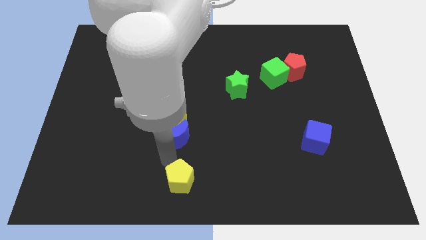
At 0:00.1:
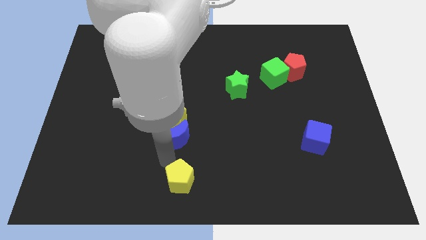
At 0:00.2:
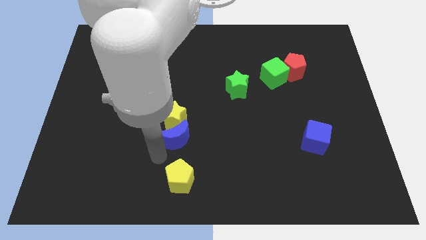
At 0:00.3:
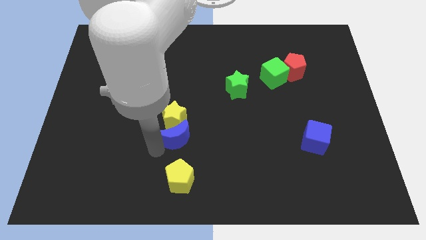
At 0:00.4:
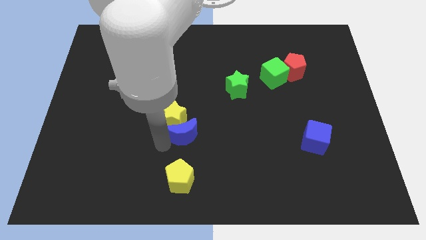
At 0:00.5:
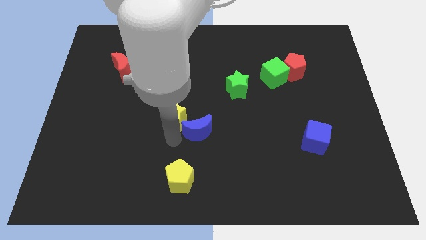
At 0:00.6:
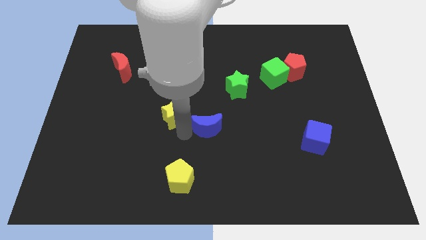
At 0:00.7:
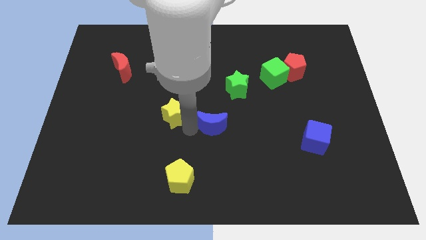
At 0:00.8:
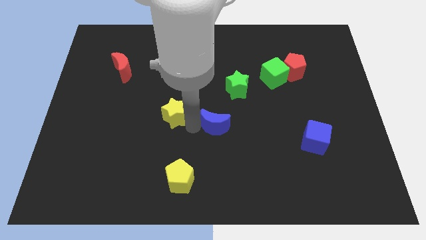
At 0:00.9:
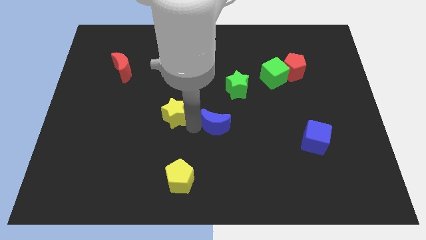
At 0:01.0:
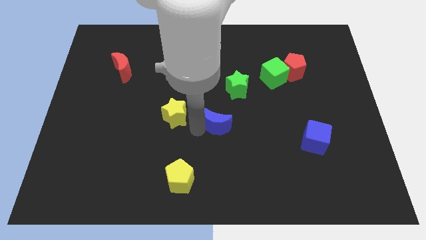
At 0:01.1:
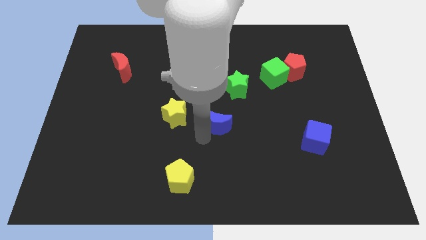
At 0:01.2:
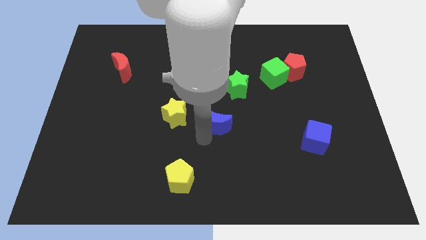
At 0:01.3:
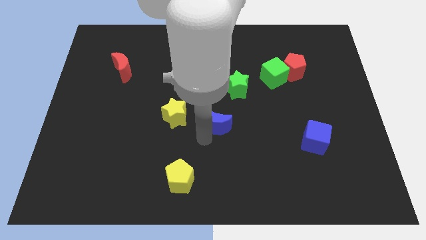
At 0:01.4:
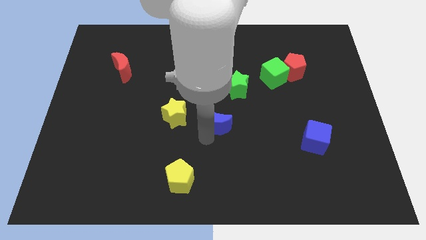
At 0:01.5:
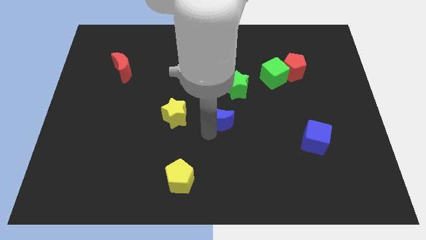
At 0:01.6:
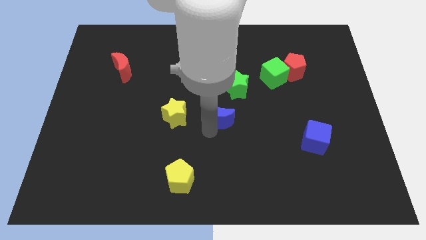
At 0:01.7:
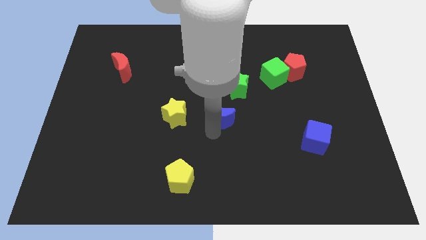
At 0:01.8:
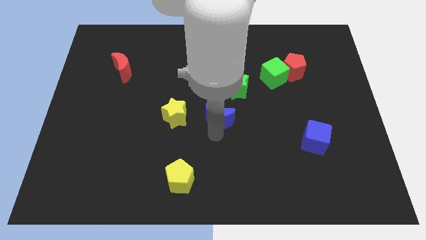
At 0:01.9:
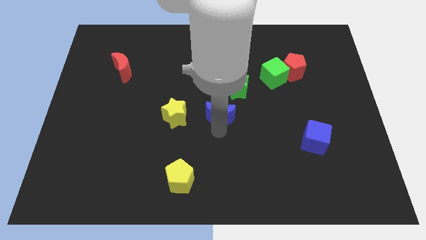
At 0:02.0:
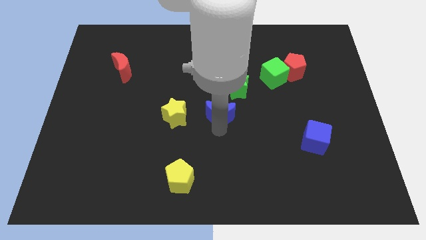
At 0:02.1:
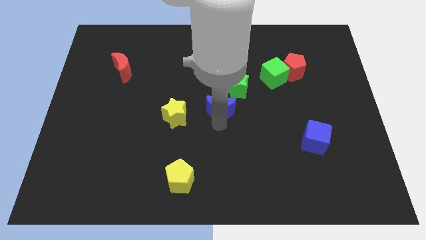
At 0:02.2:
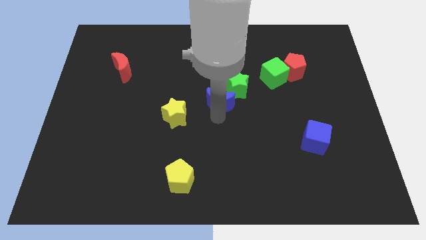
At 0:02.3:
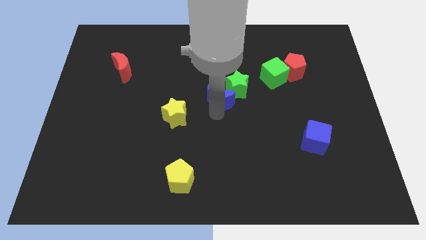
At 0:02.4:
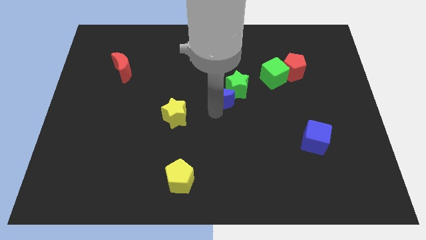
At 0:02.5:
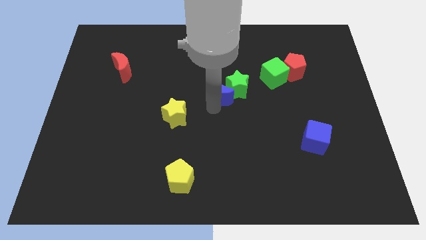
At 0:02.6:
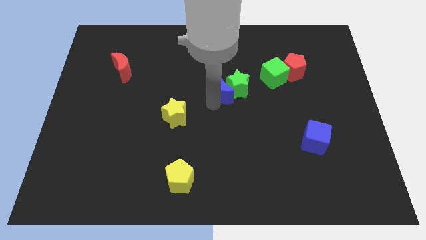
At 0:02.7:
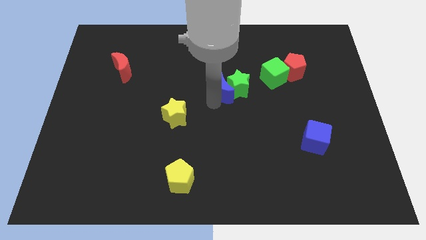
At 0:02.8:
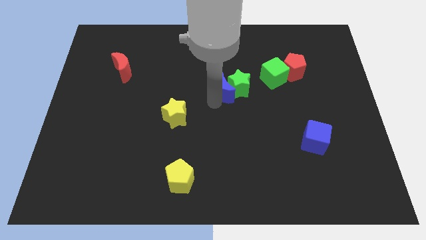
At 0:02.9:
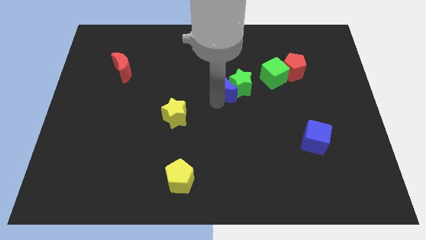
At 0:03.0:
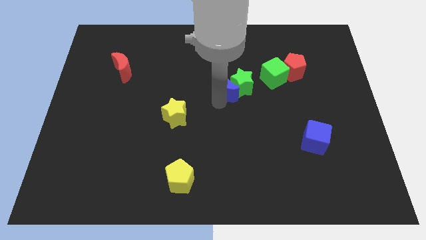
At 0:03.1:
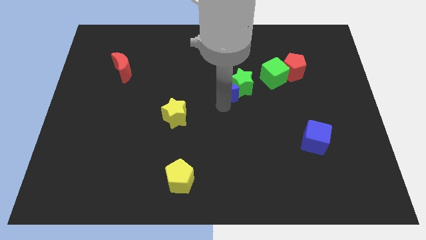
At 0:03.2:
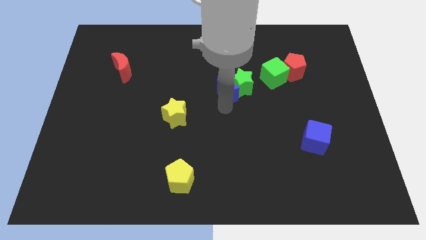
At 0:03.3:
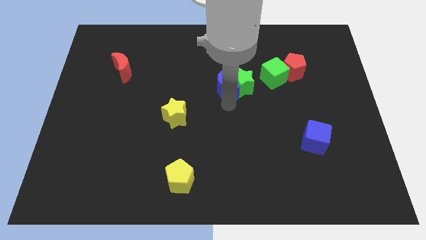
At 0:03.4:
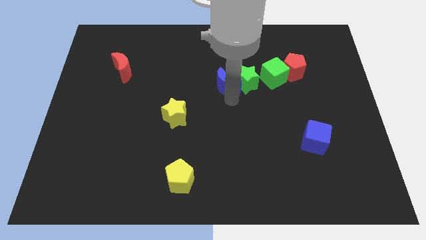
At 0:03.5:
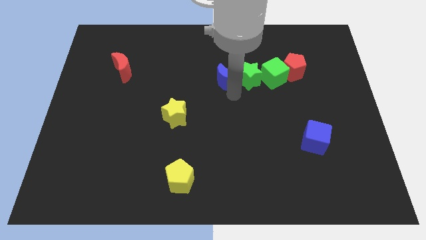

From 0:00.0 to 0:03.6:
push blue moon in to green star

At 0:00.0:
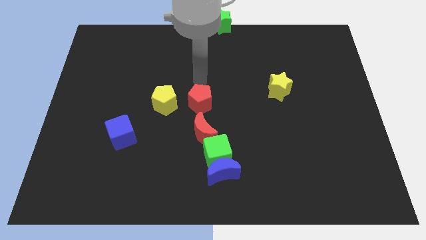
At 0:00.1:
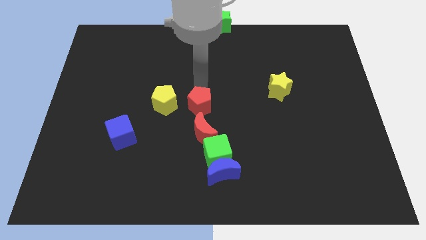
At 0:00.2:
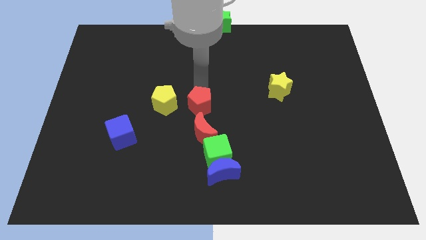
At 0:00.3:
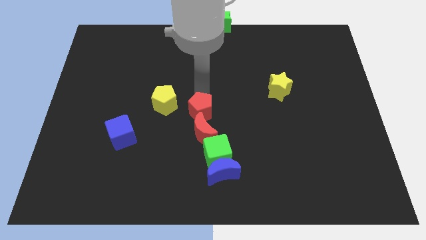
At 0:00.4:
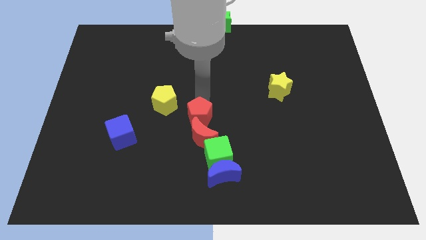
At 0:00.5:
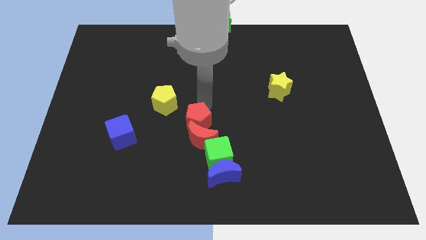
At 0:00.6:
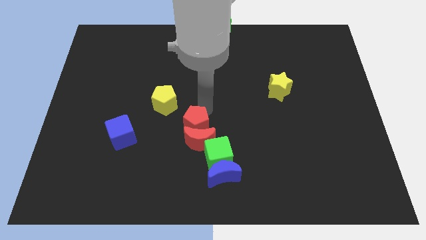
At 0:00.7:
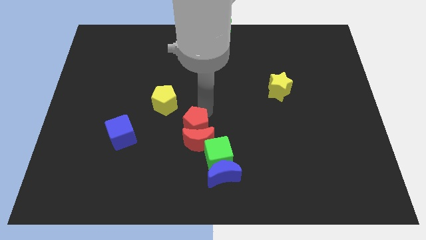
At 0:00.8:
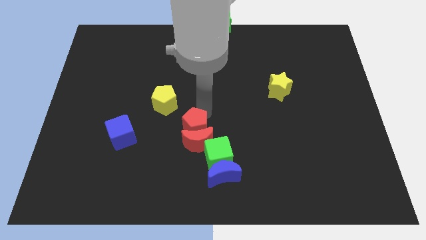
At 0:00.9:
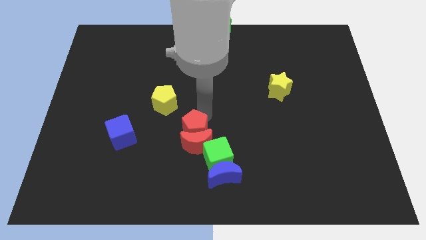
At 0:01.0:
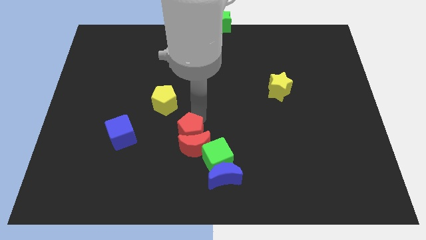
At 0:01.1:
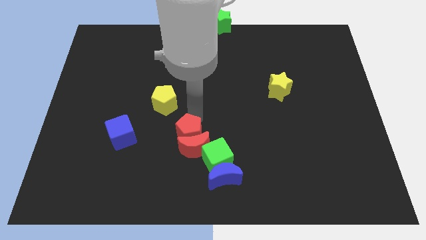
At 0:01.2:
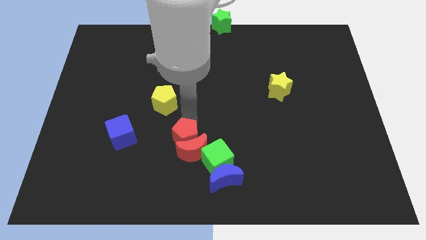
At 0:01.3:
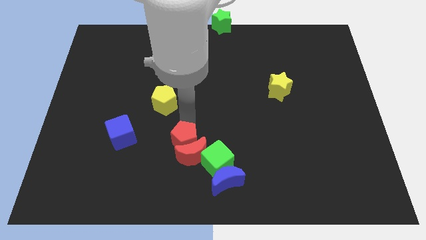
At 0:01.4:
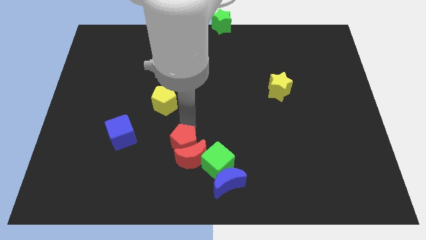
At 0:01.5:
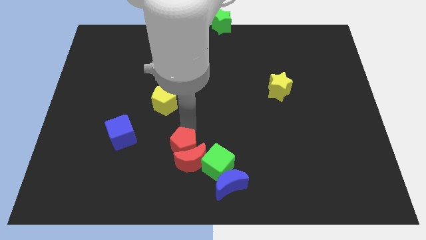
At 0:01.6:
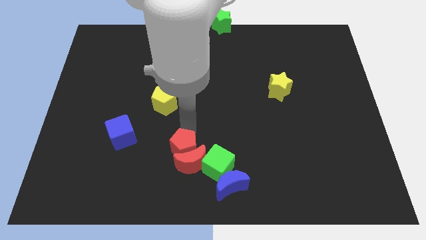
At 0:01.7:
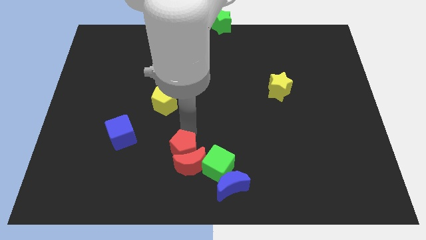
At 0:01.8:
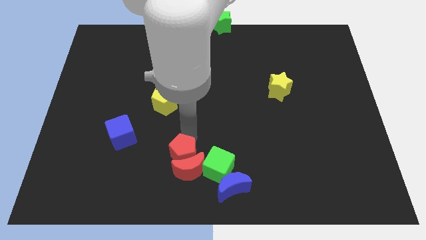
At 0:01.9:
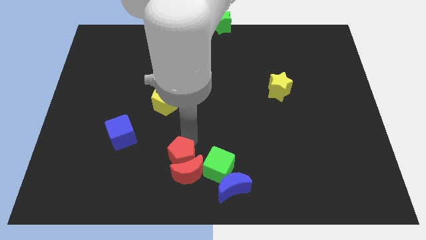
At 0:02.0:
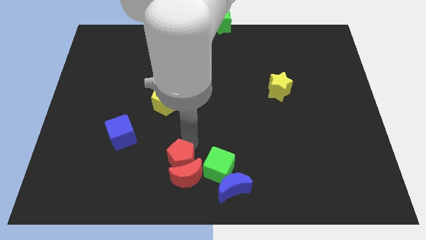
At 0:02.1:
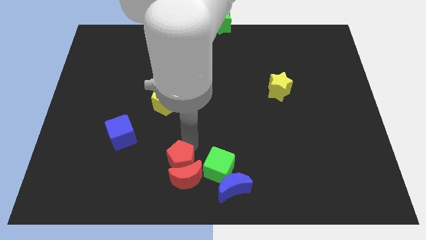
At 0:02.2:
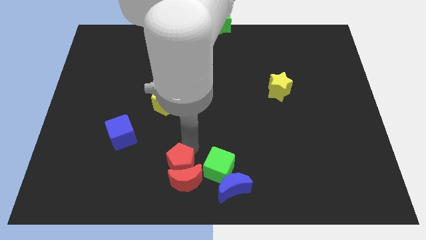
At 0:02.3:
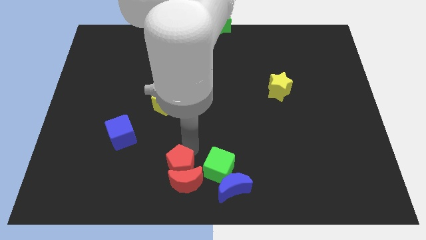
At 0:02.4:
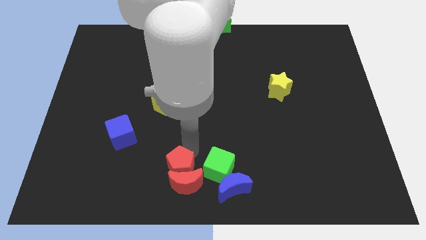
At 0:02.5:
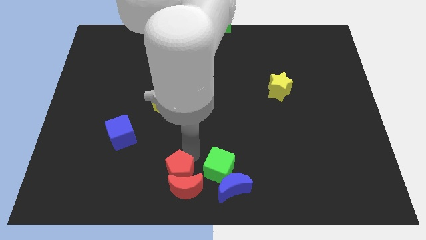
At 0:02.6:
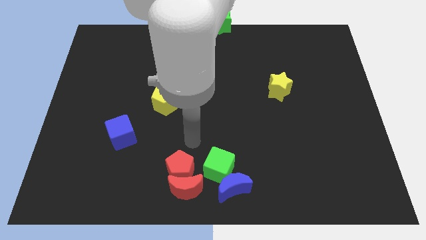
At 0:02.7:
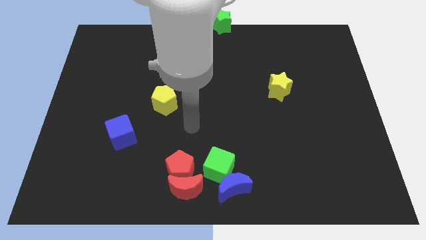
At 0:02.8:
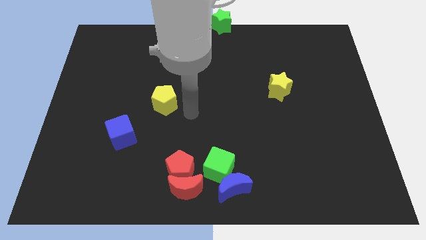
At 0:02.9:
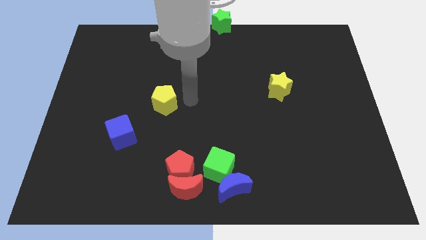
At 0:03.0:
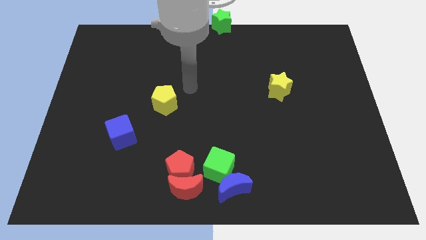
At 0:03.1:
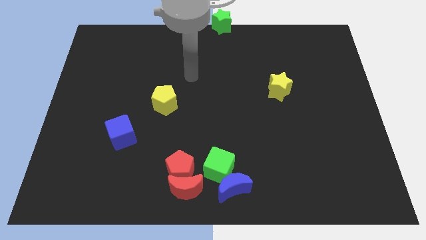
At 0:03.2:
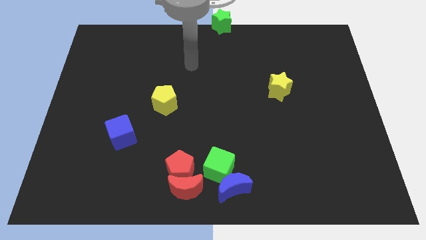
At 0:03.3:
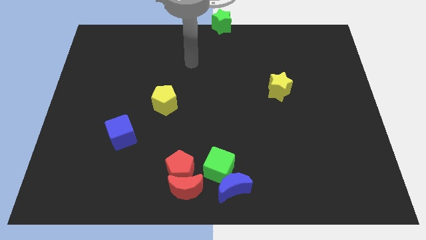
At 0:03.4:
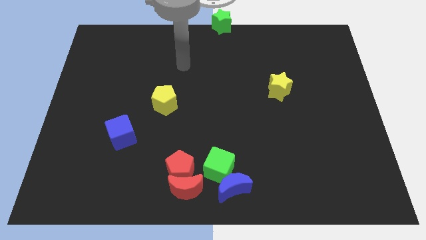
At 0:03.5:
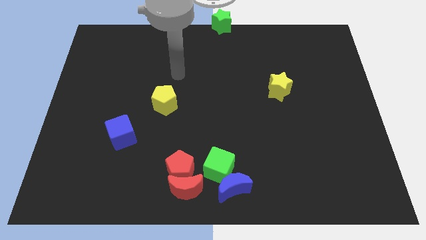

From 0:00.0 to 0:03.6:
push the red pentagon along with red crescent to bottom center

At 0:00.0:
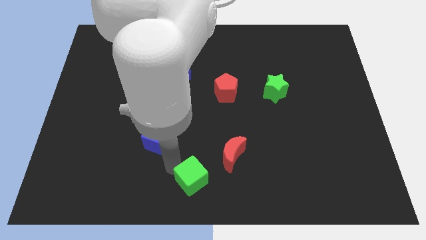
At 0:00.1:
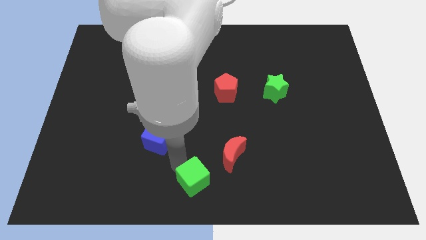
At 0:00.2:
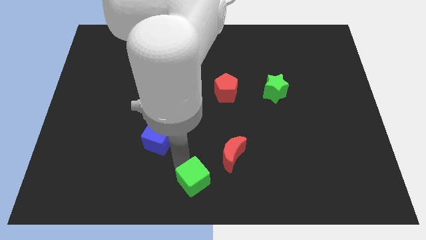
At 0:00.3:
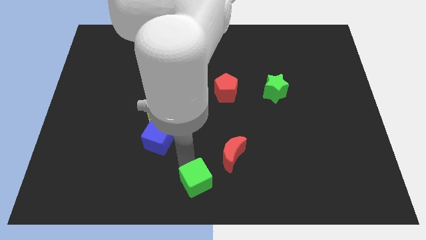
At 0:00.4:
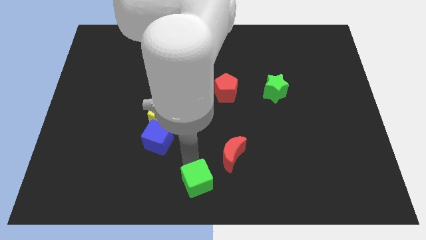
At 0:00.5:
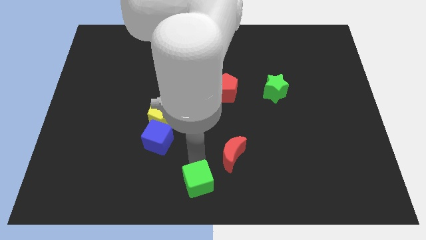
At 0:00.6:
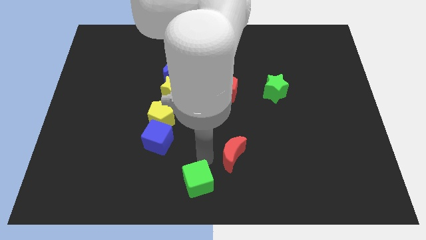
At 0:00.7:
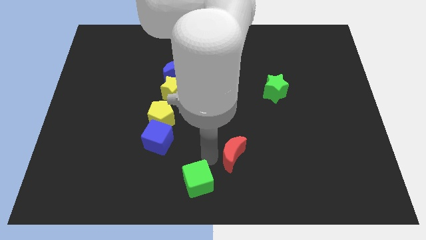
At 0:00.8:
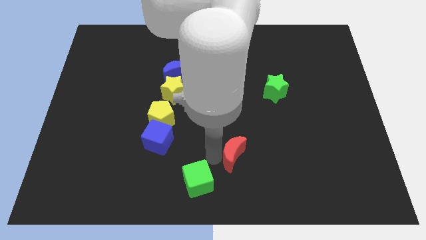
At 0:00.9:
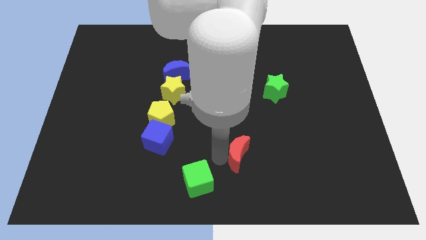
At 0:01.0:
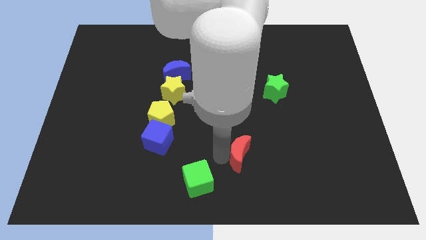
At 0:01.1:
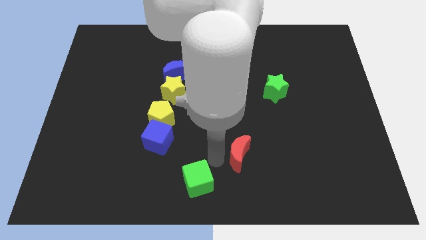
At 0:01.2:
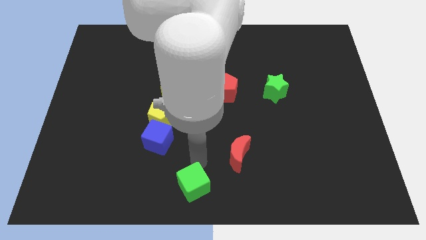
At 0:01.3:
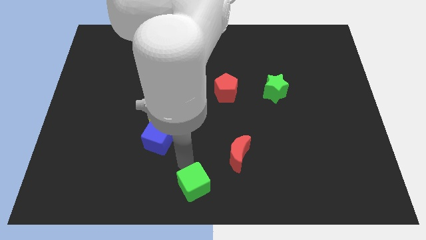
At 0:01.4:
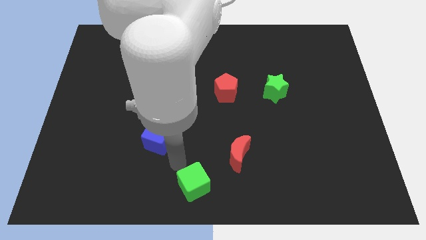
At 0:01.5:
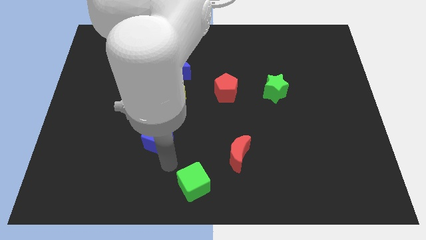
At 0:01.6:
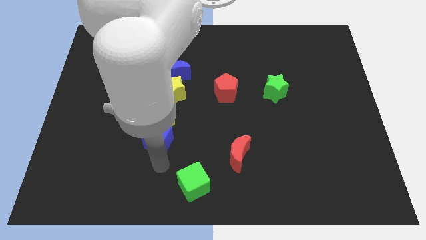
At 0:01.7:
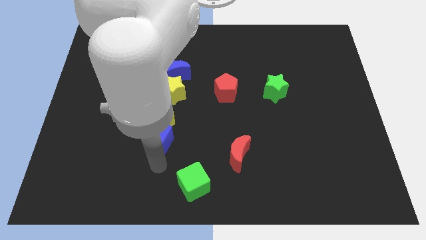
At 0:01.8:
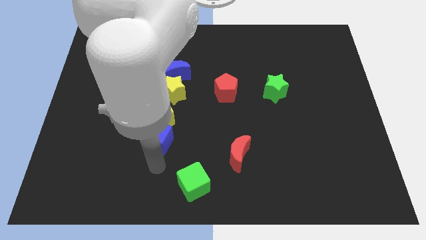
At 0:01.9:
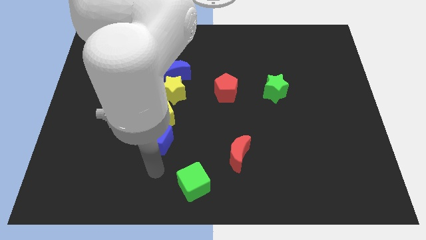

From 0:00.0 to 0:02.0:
slightly push the red moon to the right
